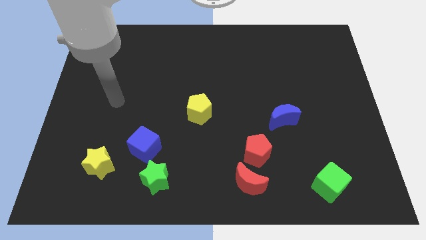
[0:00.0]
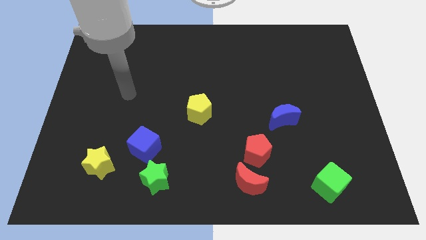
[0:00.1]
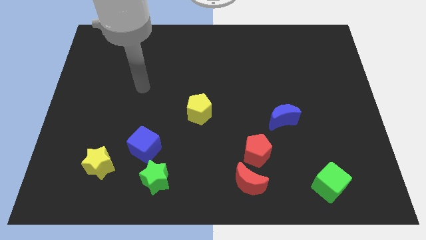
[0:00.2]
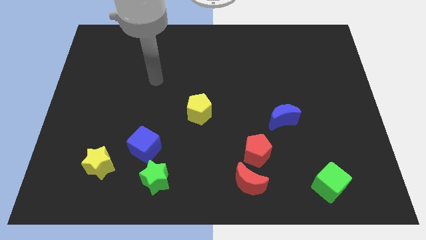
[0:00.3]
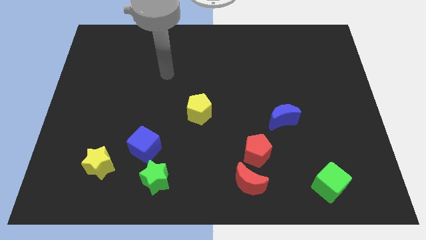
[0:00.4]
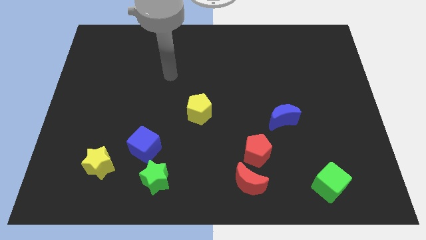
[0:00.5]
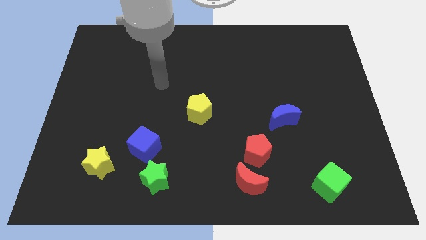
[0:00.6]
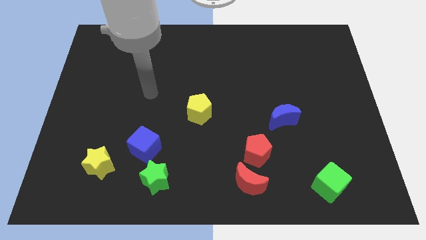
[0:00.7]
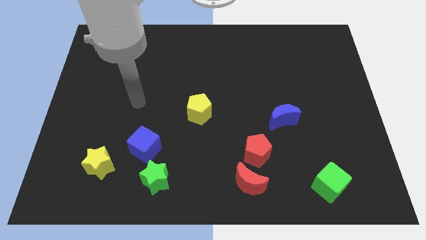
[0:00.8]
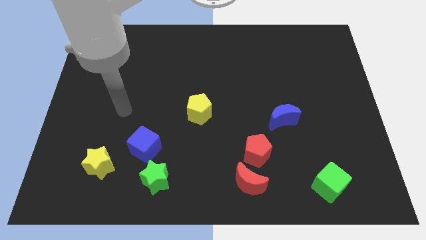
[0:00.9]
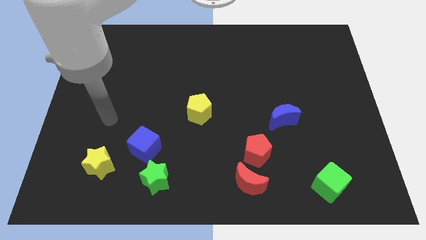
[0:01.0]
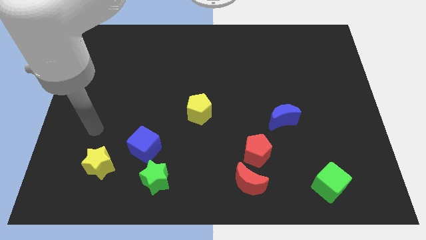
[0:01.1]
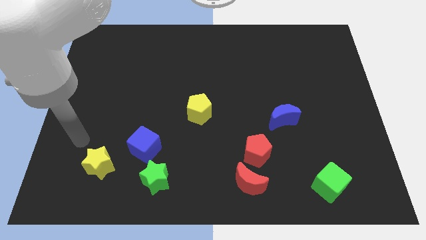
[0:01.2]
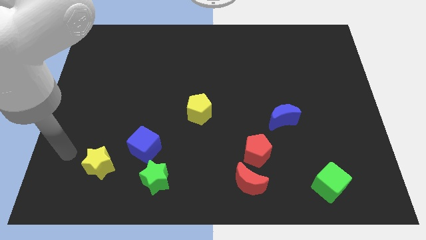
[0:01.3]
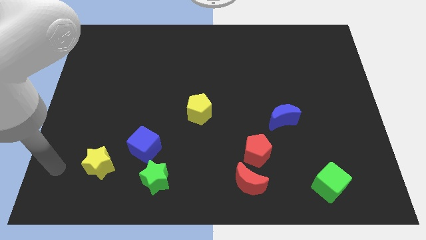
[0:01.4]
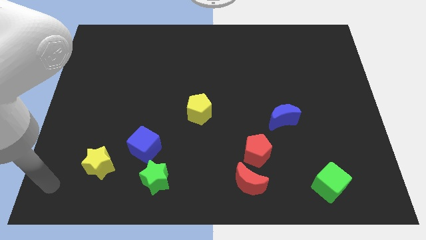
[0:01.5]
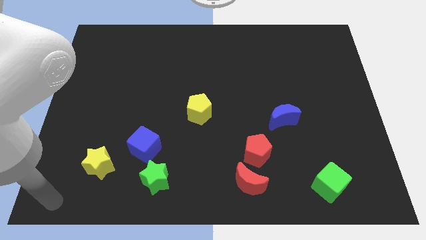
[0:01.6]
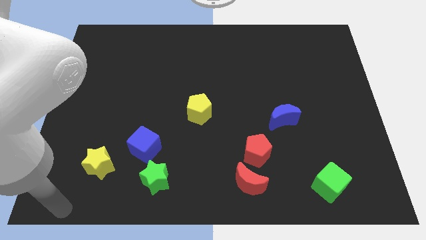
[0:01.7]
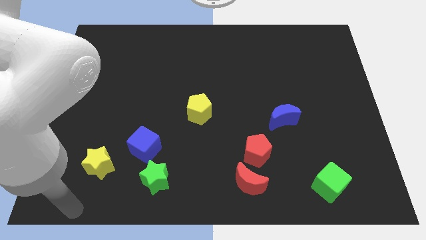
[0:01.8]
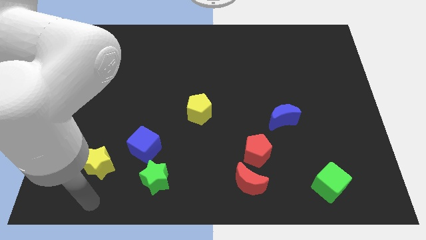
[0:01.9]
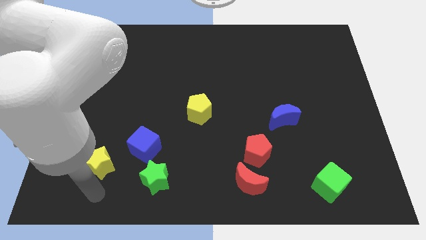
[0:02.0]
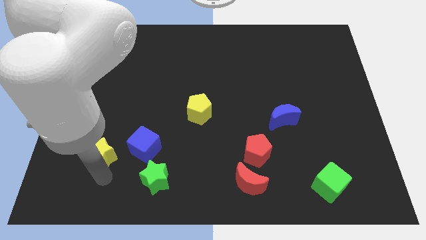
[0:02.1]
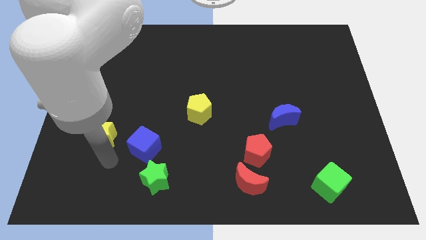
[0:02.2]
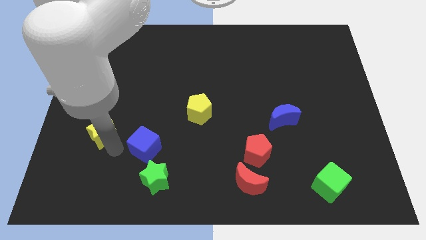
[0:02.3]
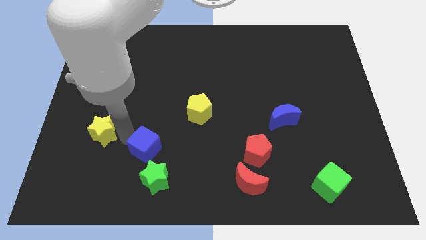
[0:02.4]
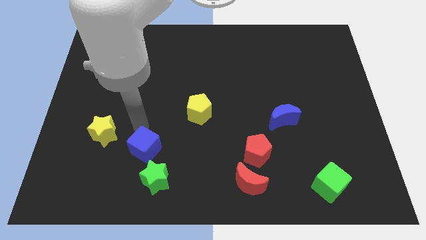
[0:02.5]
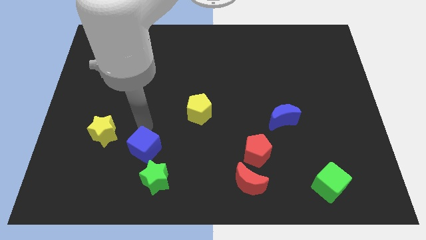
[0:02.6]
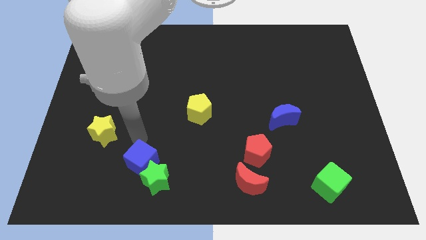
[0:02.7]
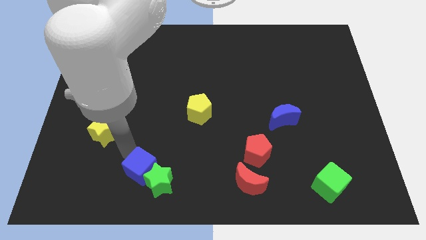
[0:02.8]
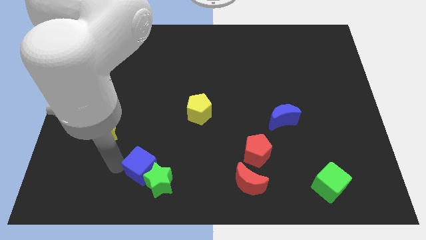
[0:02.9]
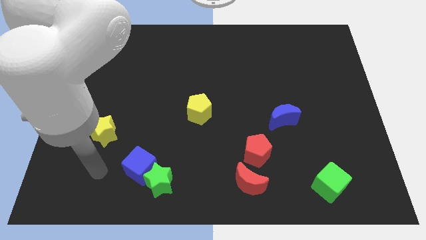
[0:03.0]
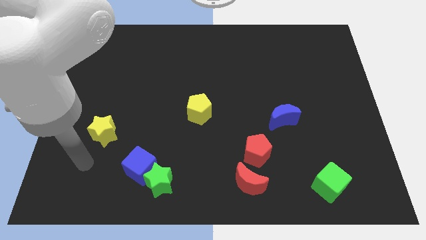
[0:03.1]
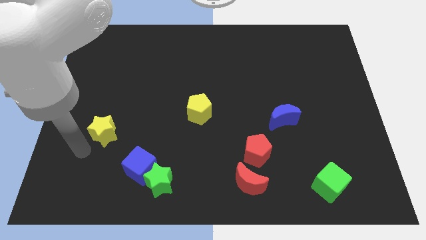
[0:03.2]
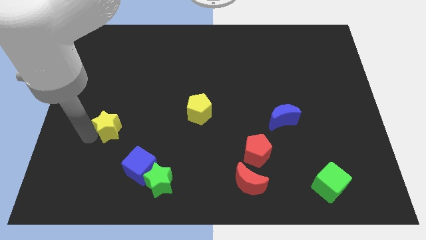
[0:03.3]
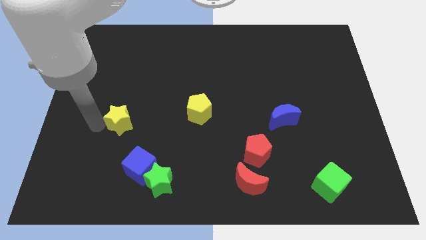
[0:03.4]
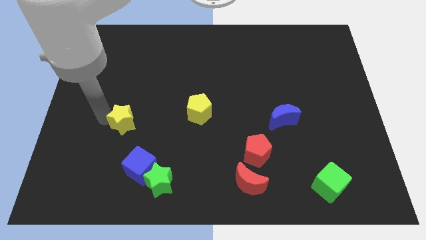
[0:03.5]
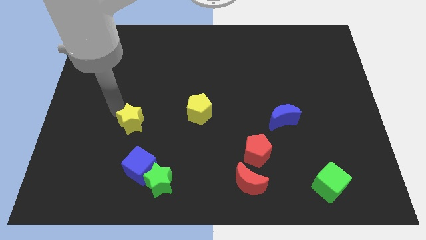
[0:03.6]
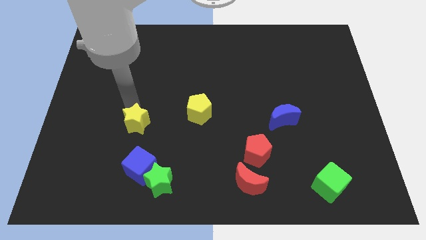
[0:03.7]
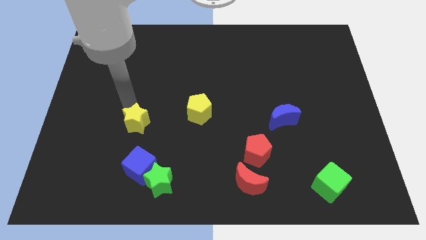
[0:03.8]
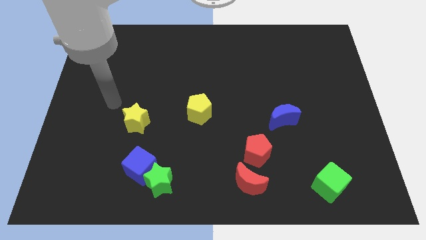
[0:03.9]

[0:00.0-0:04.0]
move the yellow star to the top of the blue cube

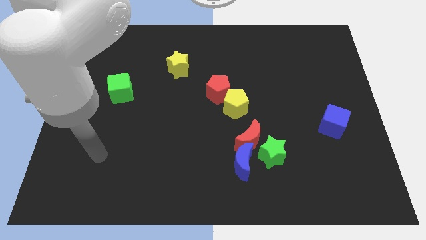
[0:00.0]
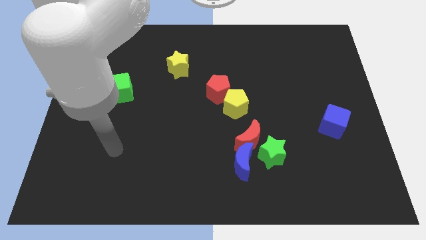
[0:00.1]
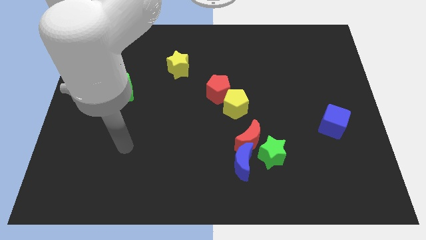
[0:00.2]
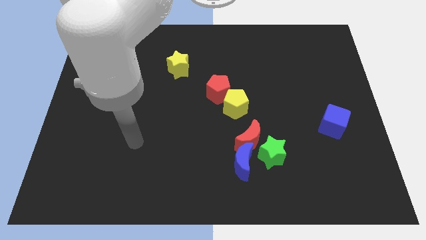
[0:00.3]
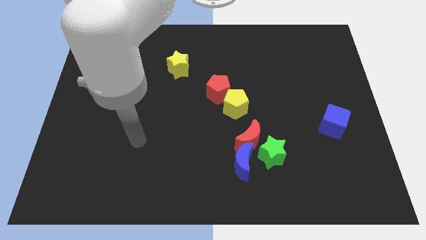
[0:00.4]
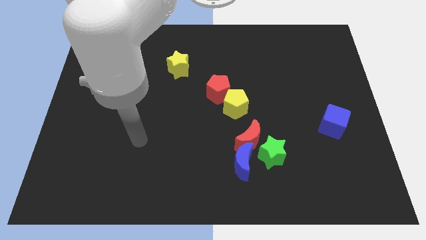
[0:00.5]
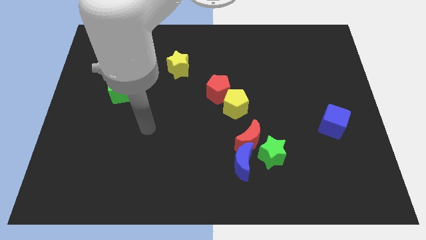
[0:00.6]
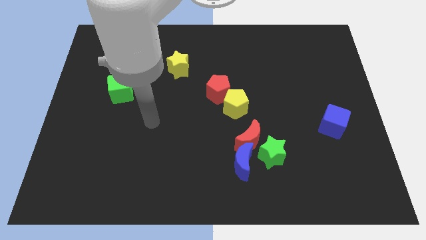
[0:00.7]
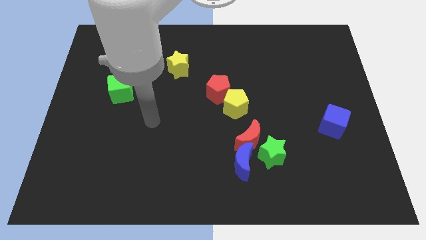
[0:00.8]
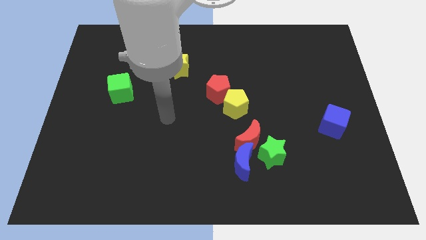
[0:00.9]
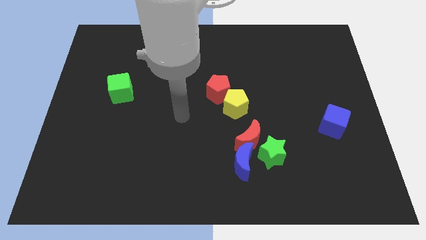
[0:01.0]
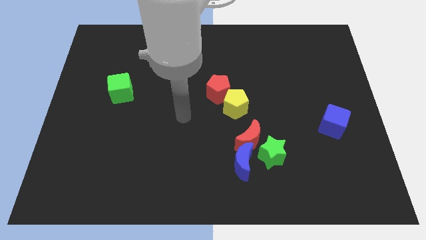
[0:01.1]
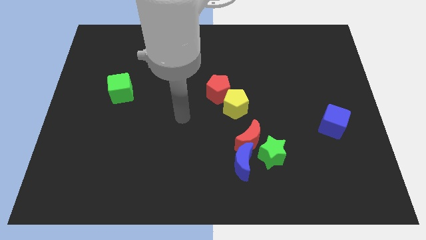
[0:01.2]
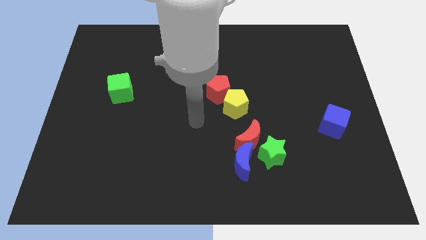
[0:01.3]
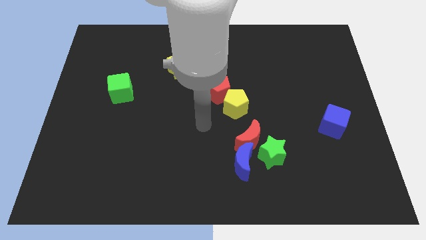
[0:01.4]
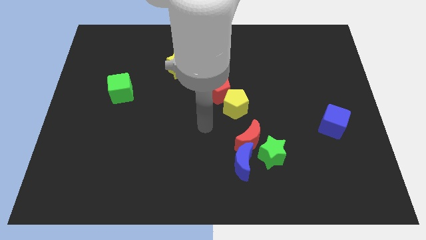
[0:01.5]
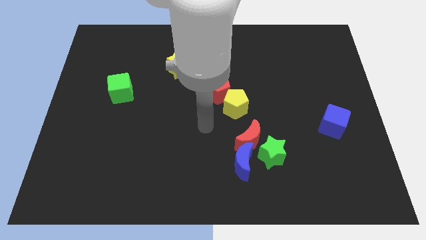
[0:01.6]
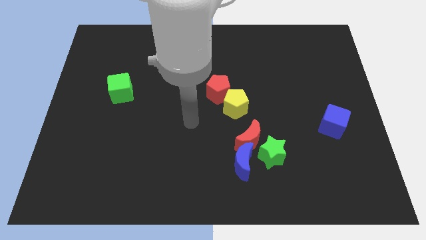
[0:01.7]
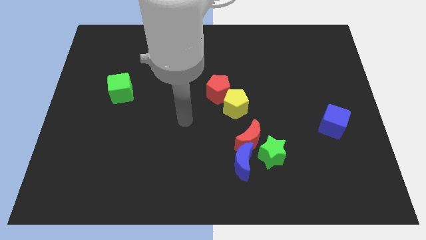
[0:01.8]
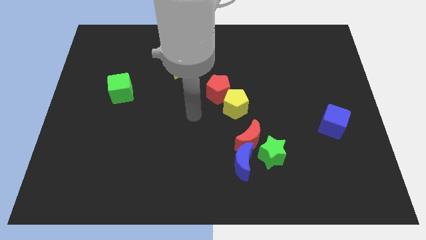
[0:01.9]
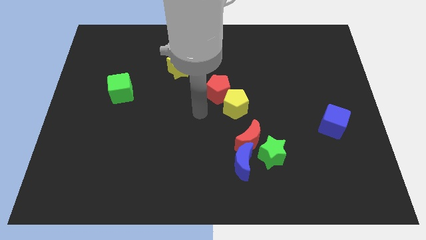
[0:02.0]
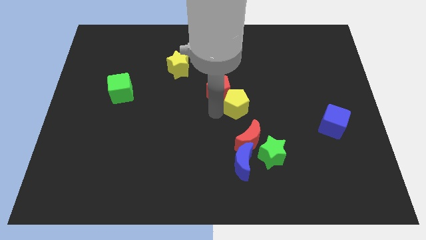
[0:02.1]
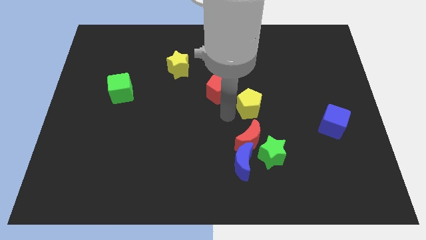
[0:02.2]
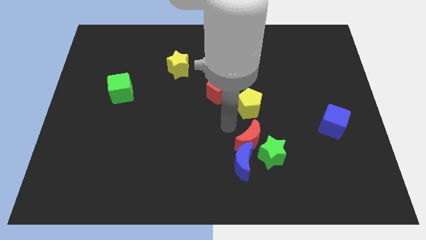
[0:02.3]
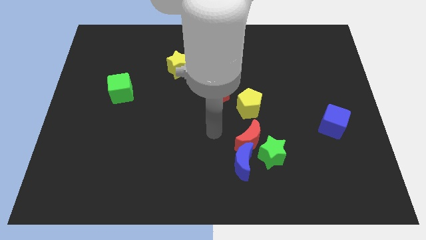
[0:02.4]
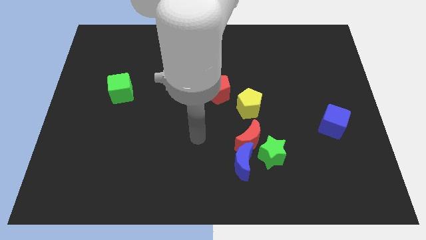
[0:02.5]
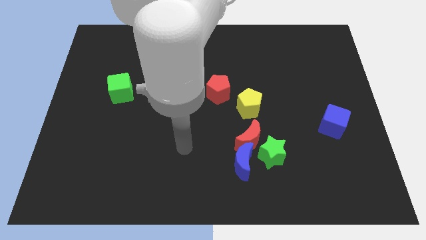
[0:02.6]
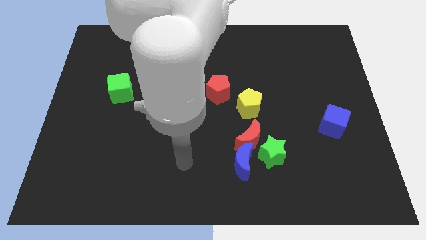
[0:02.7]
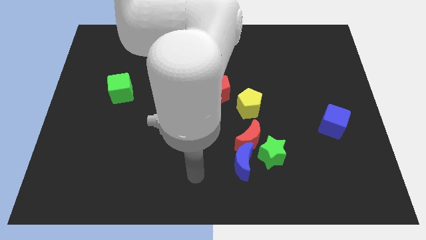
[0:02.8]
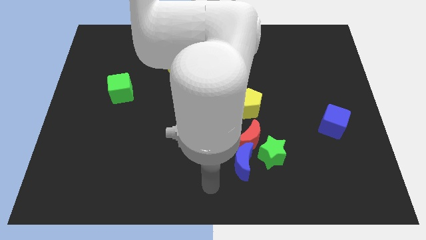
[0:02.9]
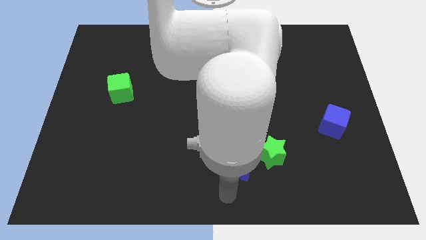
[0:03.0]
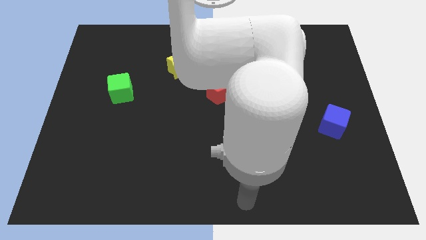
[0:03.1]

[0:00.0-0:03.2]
separate red pentagon from yellow pentagon

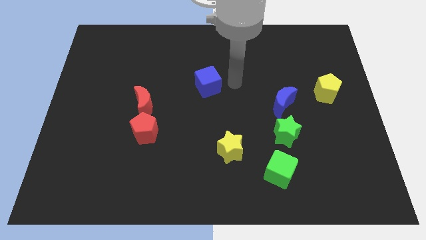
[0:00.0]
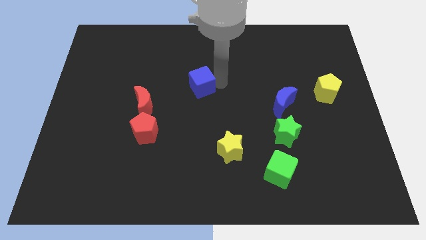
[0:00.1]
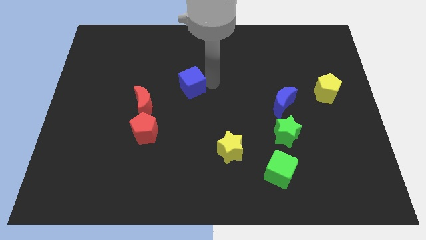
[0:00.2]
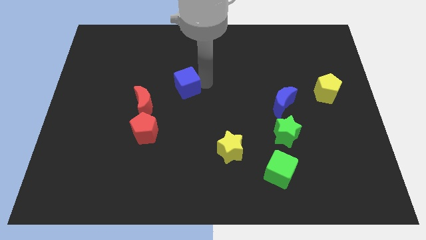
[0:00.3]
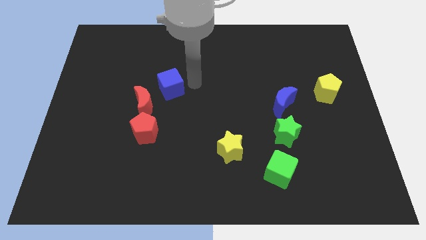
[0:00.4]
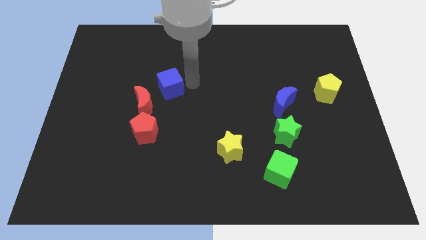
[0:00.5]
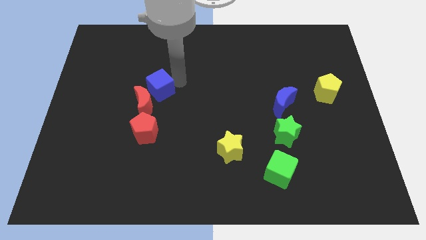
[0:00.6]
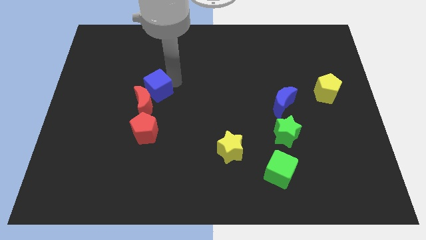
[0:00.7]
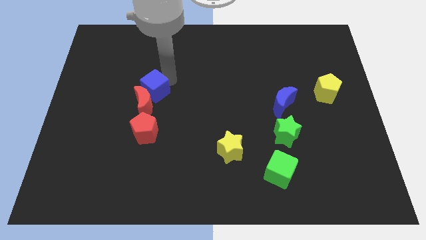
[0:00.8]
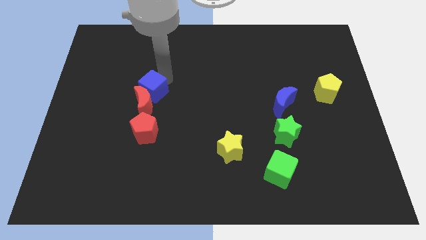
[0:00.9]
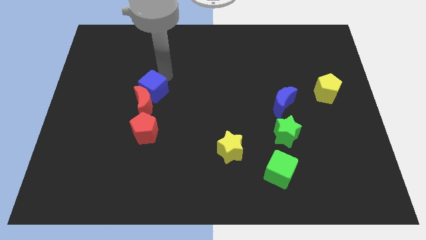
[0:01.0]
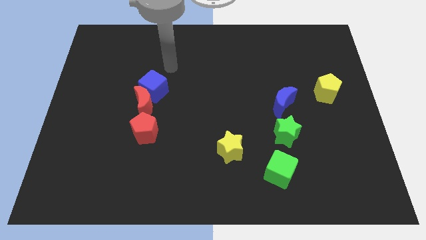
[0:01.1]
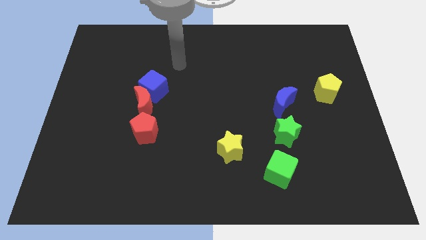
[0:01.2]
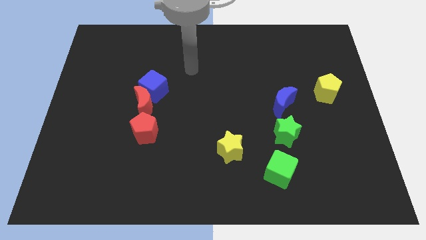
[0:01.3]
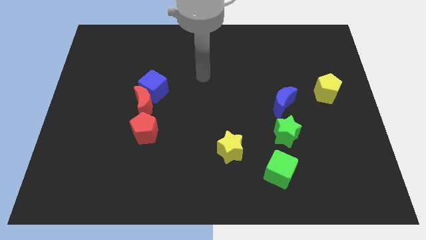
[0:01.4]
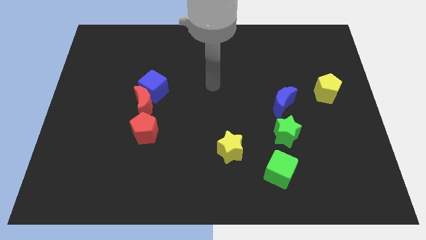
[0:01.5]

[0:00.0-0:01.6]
place the blue cube close to the red crescent

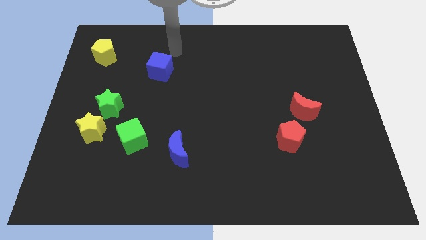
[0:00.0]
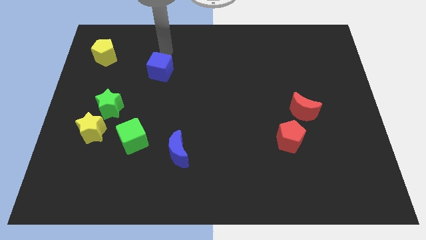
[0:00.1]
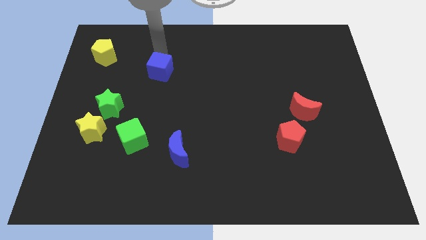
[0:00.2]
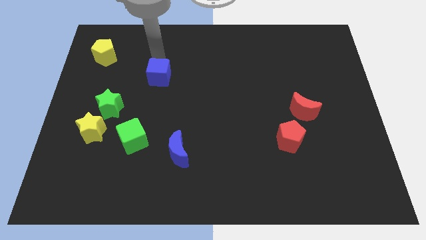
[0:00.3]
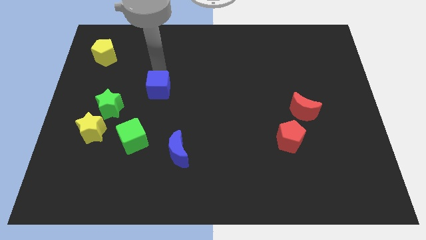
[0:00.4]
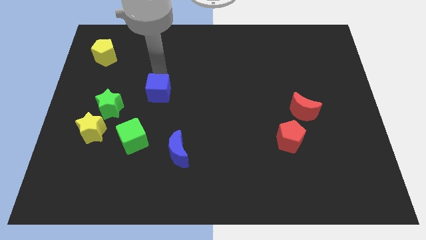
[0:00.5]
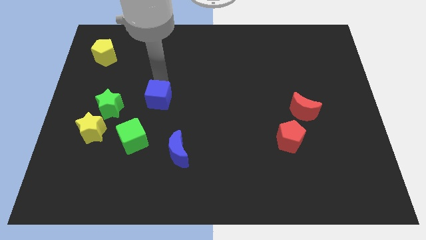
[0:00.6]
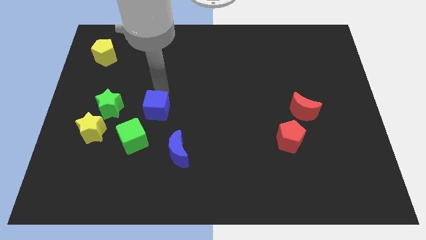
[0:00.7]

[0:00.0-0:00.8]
push the blue cube downward
